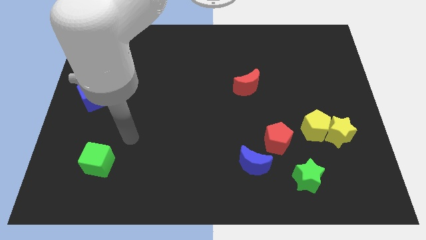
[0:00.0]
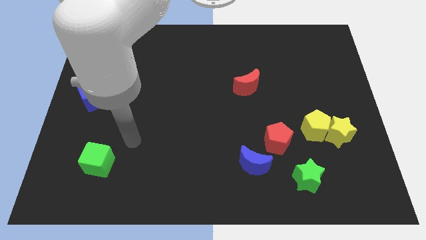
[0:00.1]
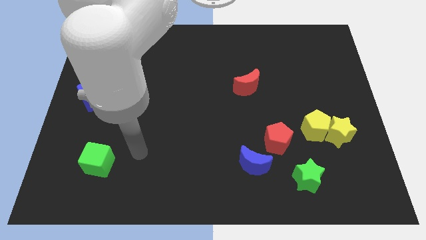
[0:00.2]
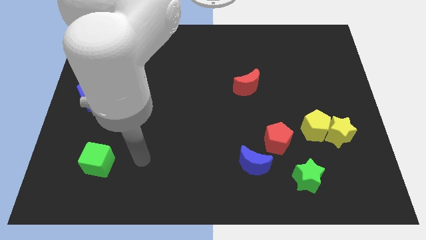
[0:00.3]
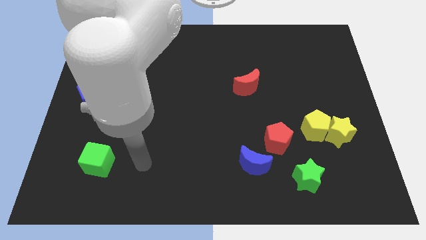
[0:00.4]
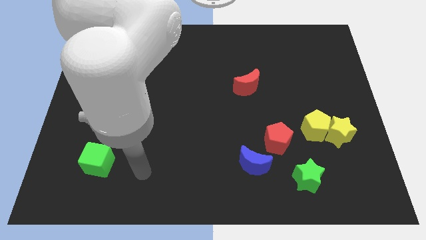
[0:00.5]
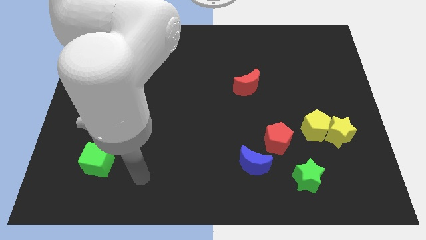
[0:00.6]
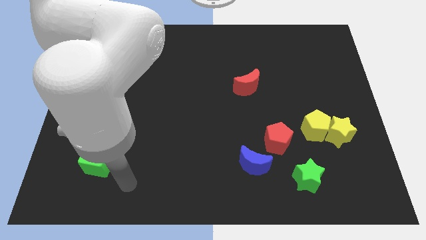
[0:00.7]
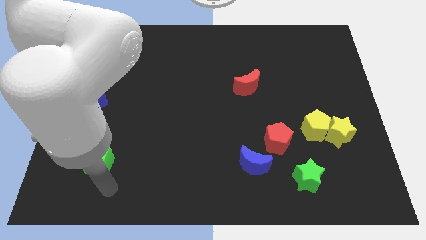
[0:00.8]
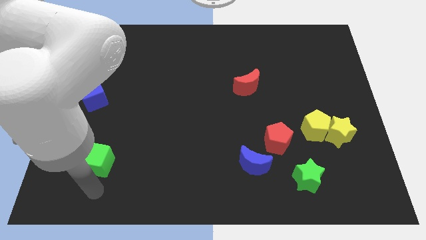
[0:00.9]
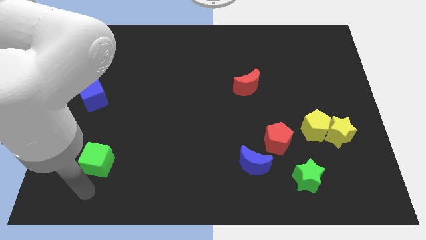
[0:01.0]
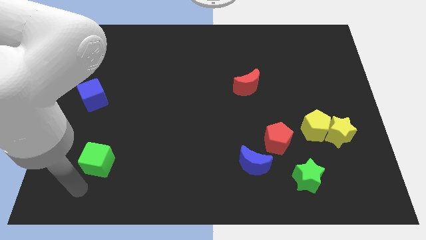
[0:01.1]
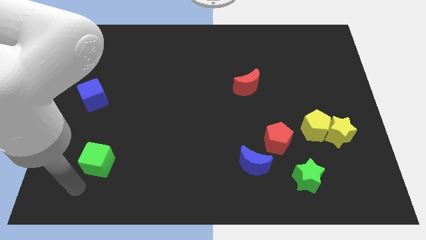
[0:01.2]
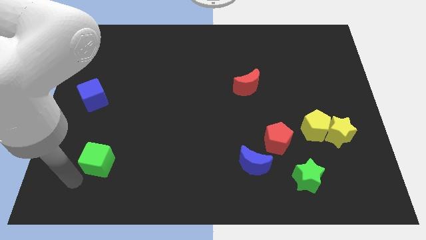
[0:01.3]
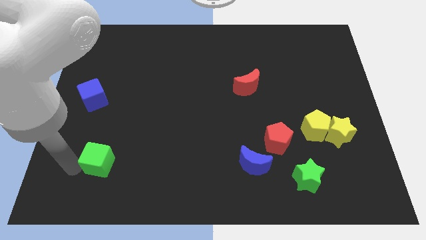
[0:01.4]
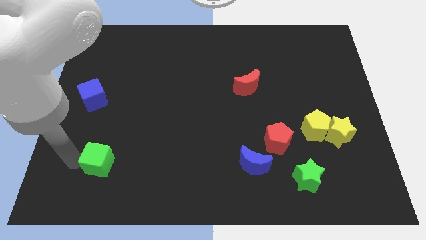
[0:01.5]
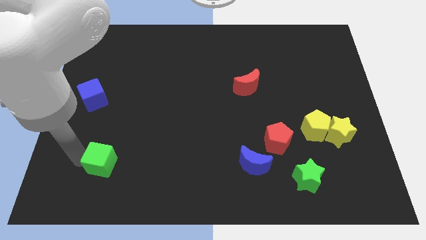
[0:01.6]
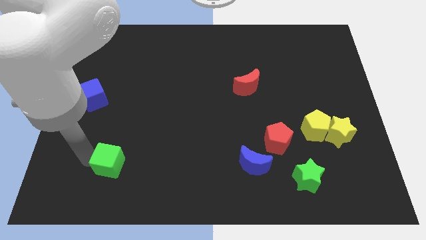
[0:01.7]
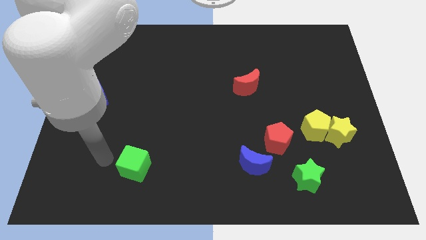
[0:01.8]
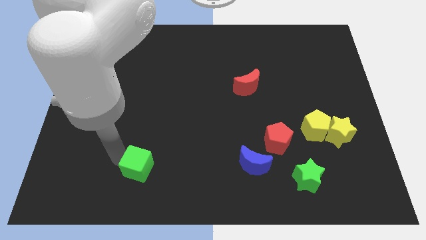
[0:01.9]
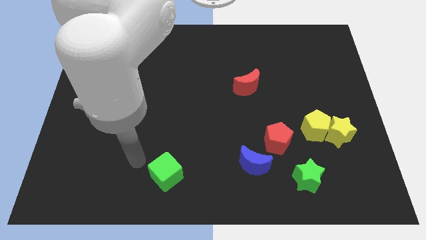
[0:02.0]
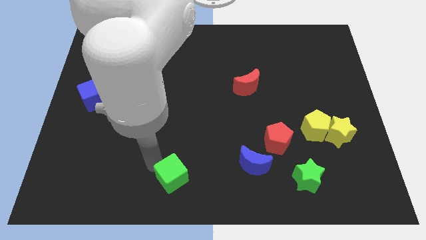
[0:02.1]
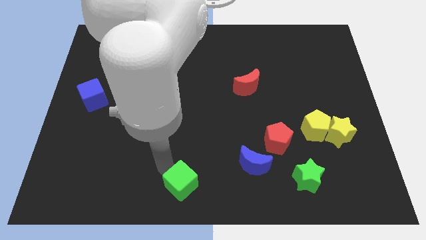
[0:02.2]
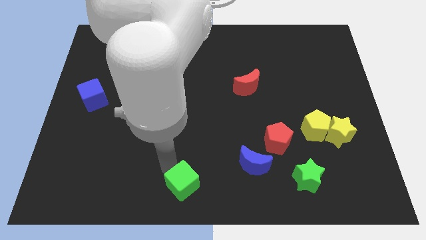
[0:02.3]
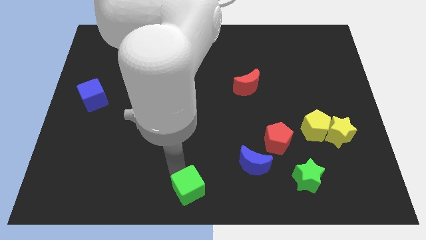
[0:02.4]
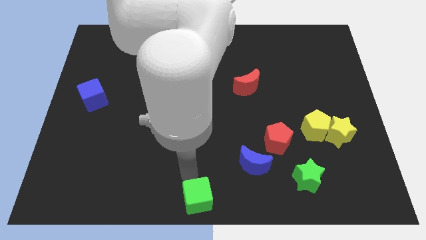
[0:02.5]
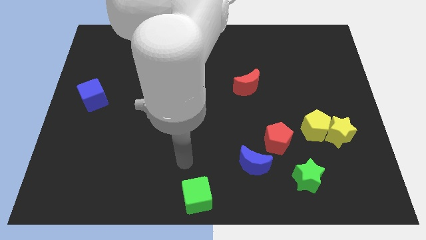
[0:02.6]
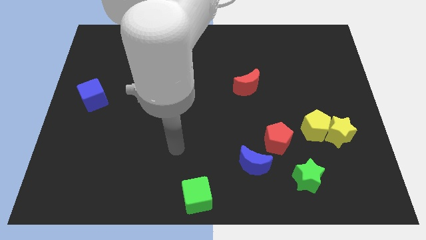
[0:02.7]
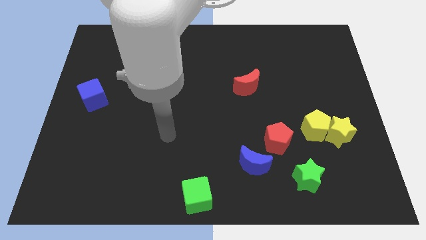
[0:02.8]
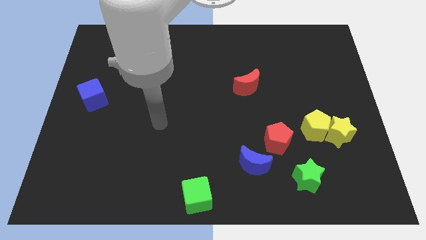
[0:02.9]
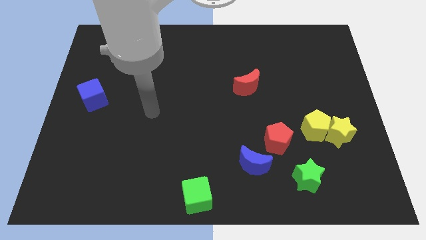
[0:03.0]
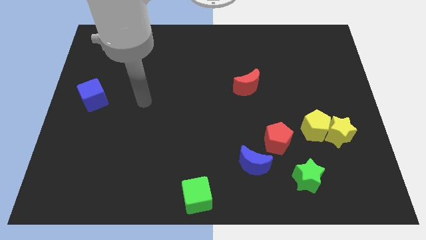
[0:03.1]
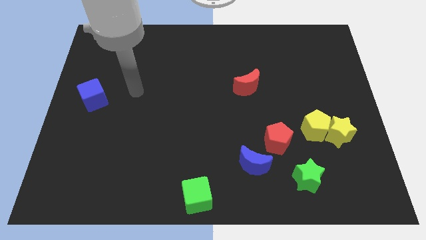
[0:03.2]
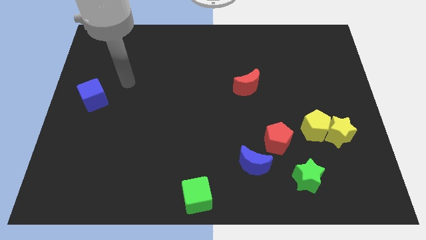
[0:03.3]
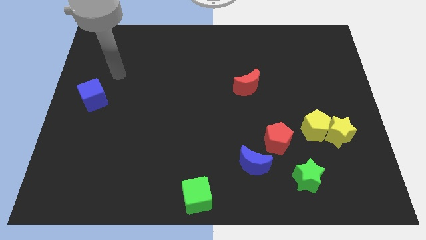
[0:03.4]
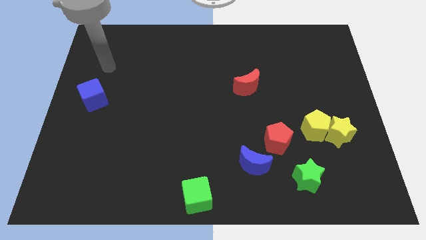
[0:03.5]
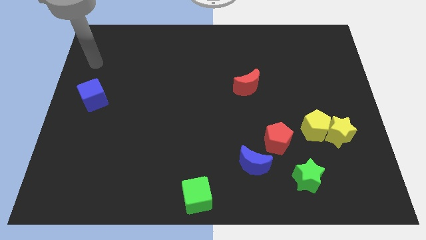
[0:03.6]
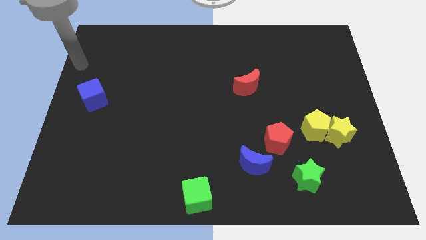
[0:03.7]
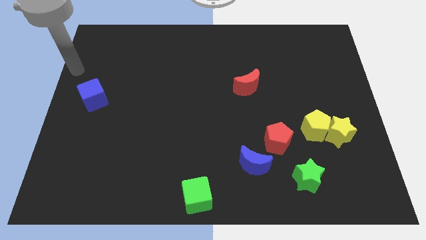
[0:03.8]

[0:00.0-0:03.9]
move green cube towards the bottom center

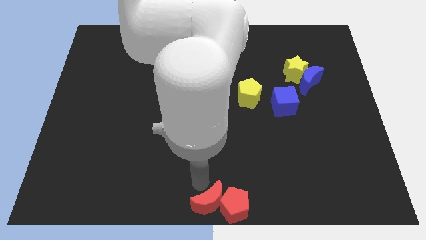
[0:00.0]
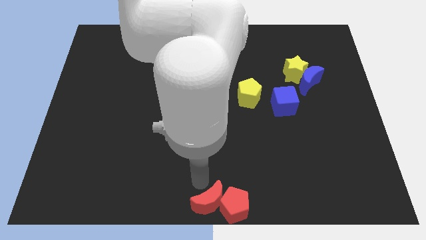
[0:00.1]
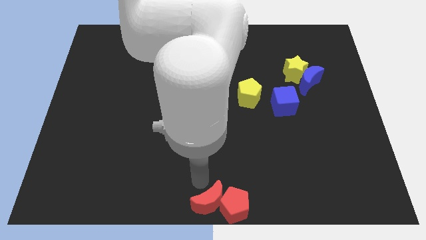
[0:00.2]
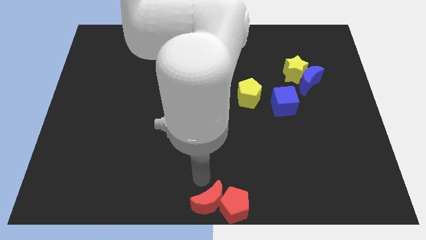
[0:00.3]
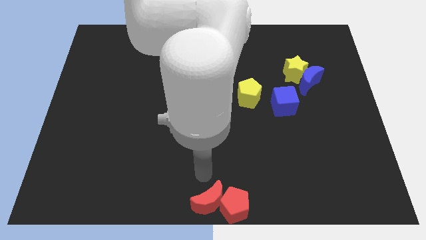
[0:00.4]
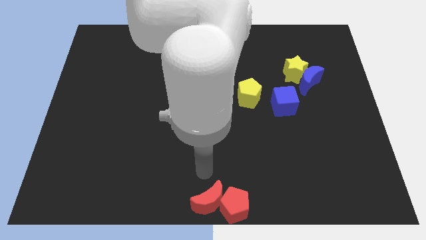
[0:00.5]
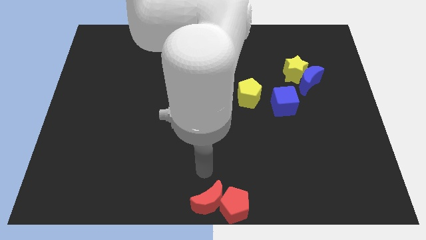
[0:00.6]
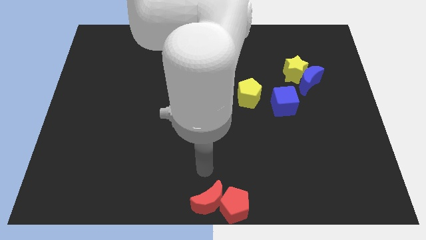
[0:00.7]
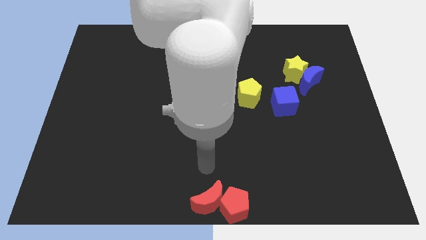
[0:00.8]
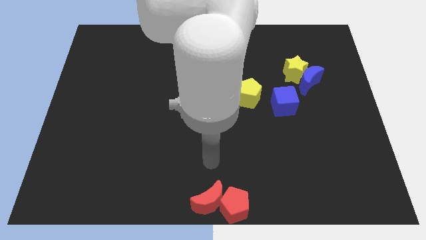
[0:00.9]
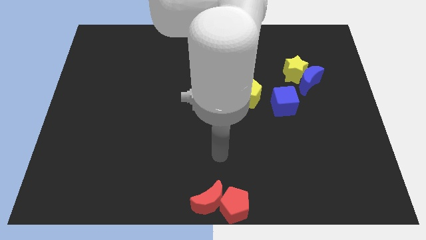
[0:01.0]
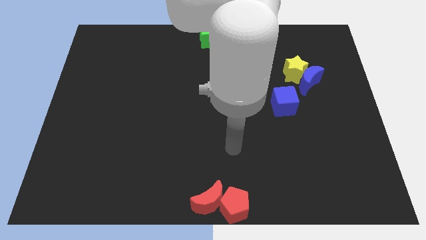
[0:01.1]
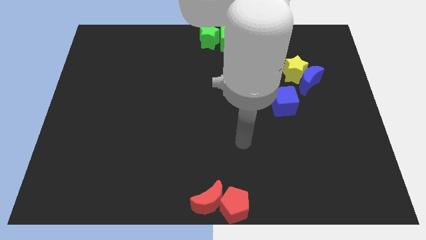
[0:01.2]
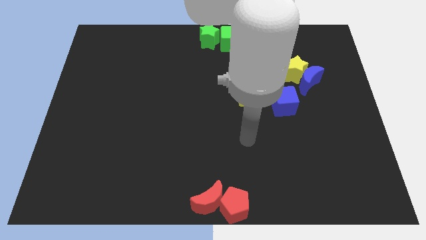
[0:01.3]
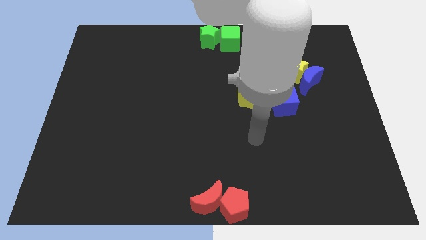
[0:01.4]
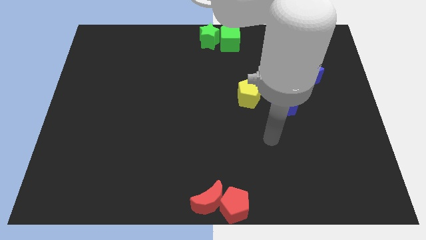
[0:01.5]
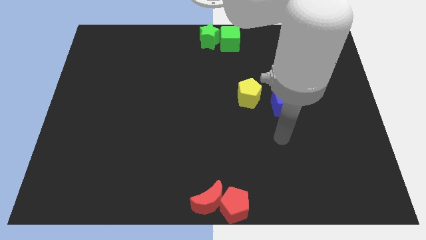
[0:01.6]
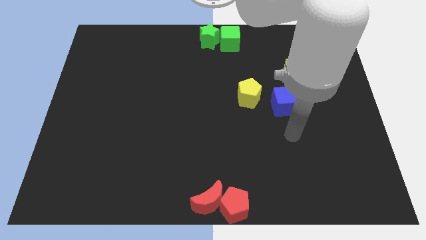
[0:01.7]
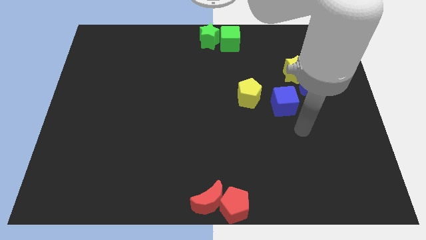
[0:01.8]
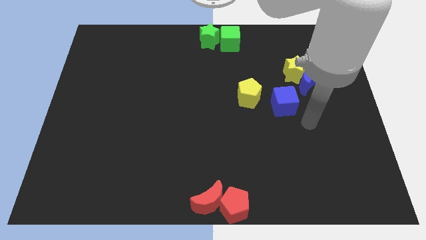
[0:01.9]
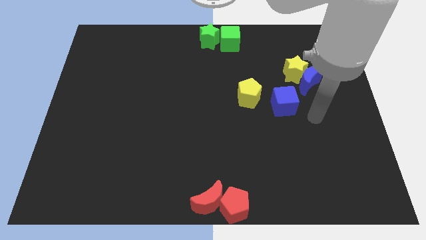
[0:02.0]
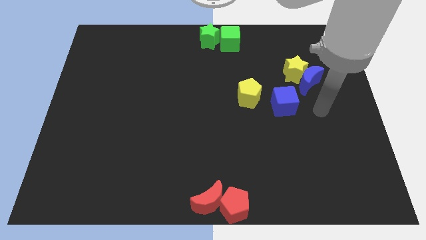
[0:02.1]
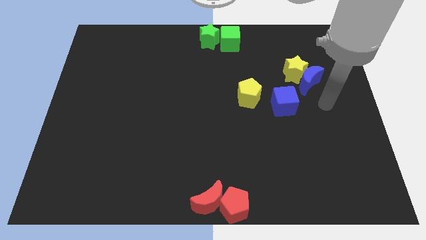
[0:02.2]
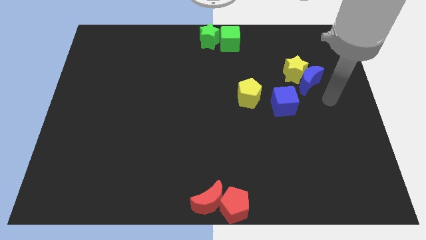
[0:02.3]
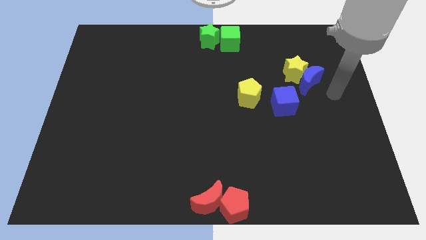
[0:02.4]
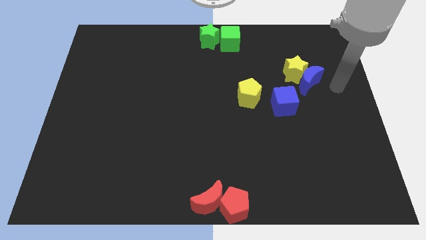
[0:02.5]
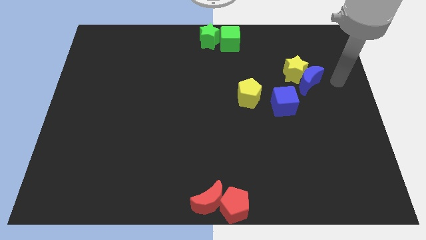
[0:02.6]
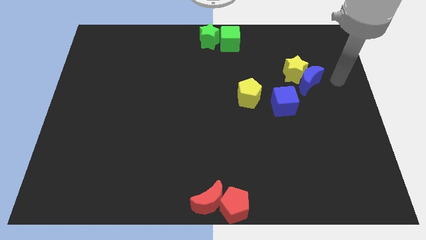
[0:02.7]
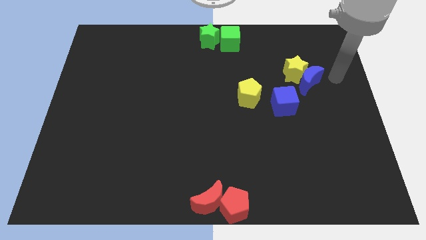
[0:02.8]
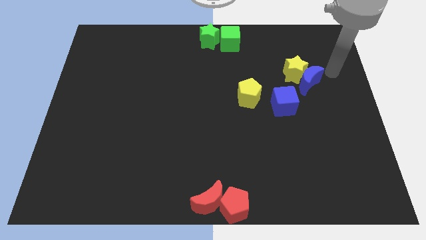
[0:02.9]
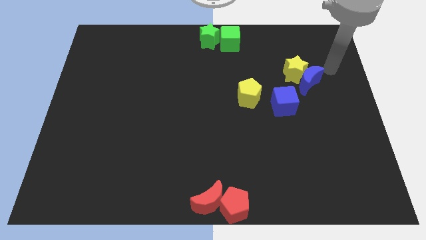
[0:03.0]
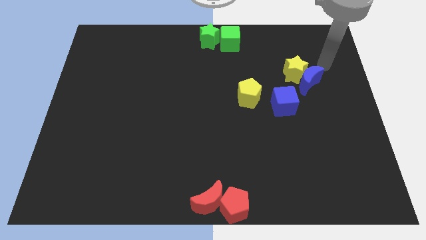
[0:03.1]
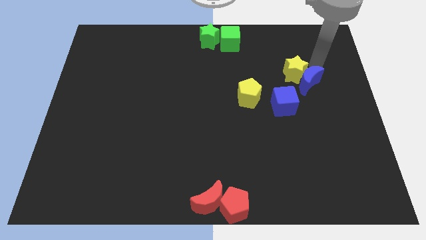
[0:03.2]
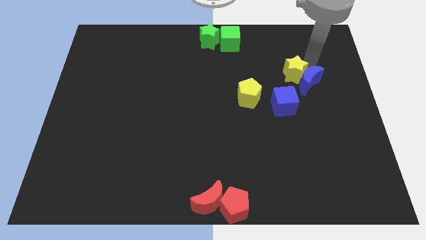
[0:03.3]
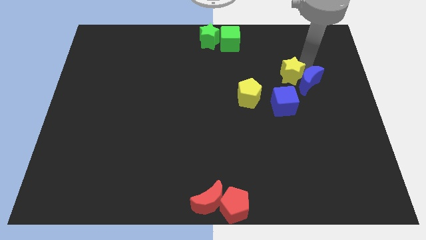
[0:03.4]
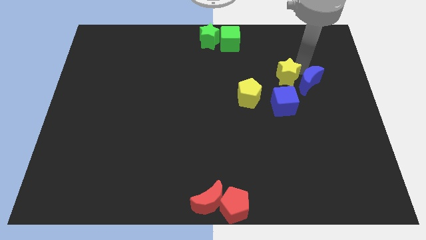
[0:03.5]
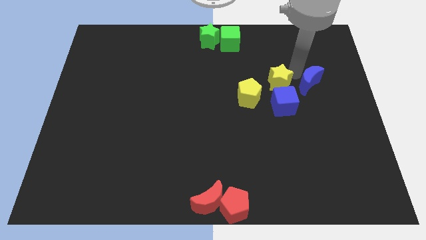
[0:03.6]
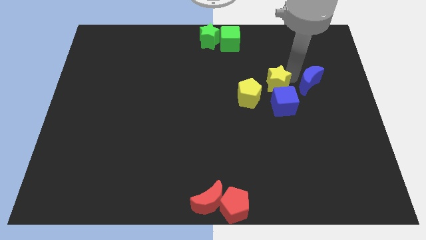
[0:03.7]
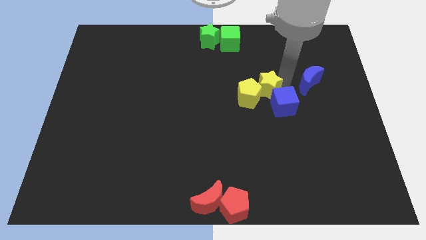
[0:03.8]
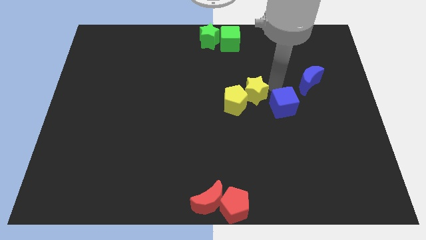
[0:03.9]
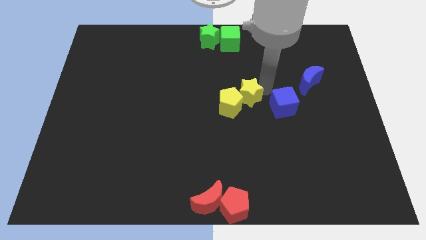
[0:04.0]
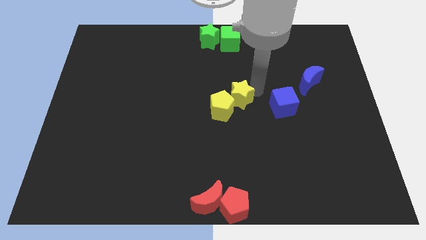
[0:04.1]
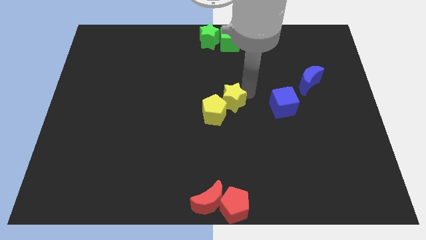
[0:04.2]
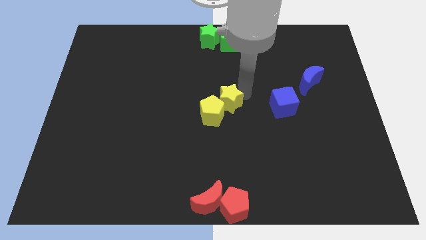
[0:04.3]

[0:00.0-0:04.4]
move yellow blocks above red blocks

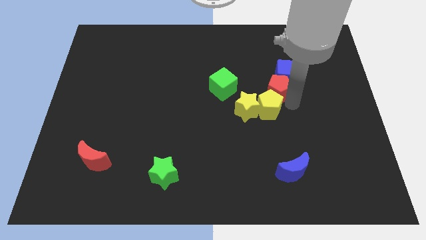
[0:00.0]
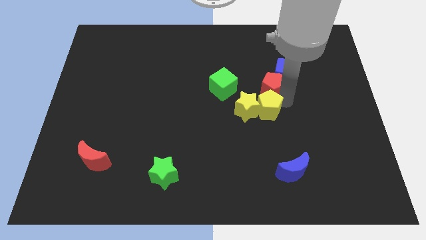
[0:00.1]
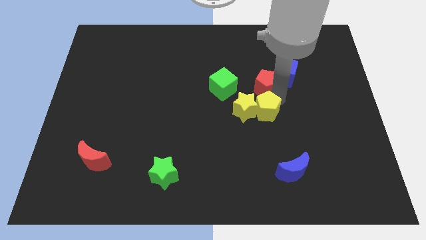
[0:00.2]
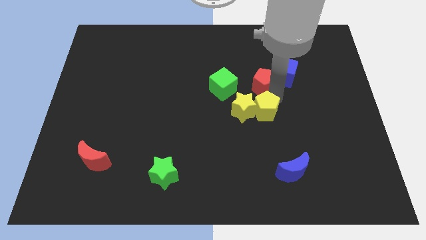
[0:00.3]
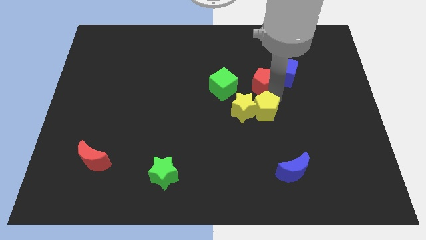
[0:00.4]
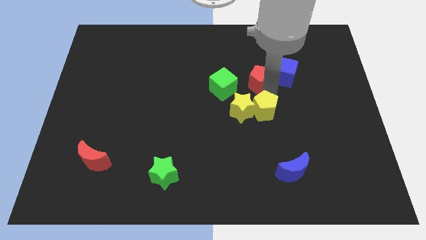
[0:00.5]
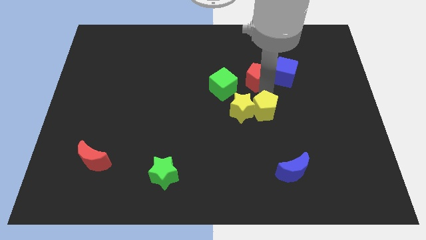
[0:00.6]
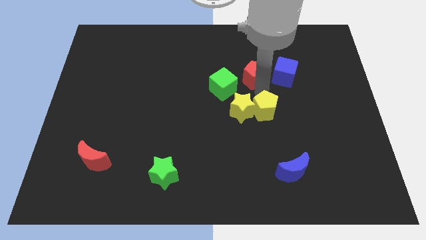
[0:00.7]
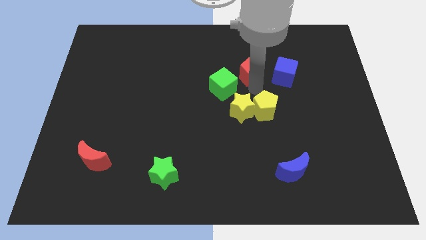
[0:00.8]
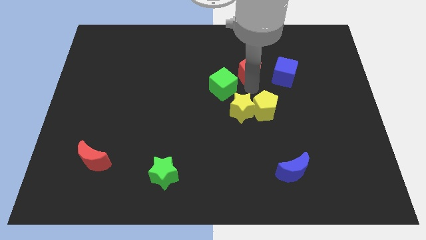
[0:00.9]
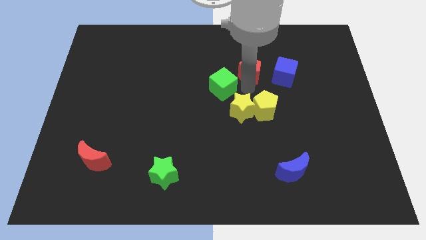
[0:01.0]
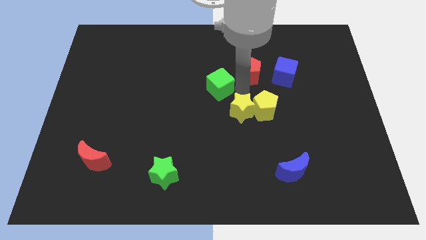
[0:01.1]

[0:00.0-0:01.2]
move the red pentagon away from the yellow pentagon
